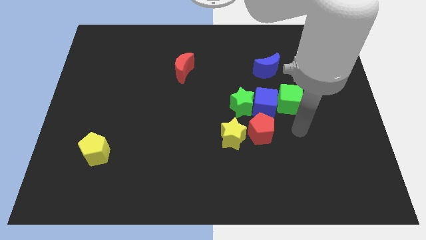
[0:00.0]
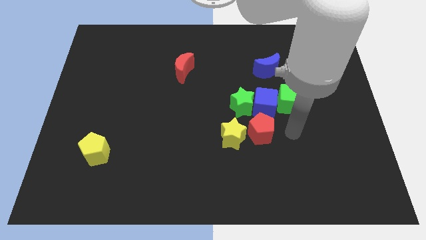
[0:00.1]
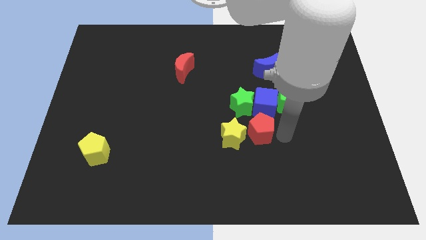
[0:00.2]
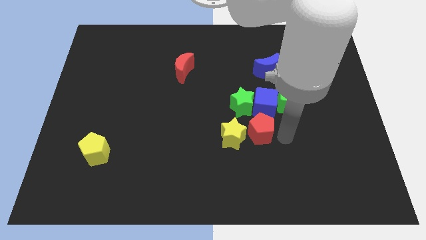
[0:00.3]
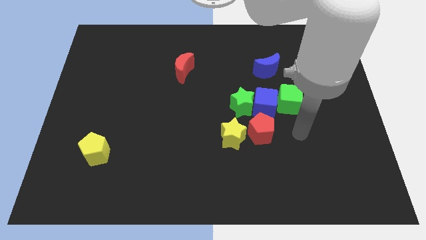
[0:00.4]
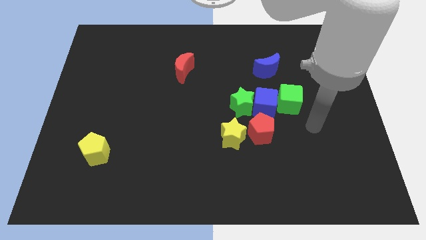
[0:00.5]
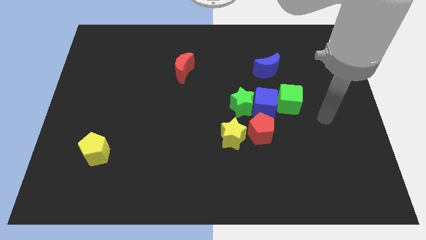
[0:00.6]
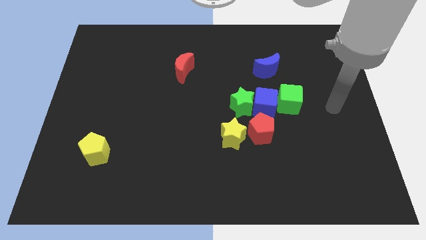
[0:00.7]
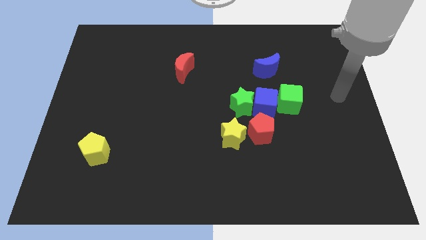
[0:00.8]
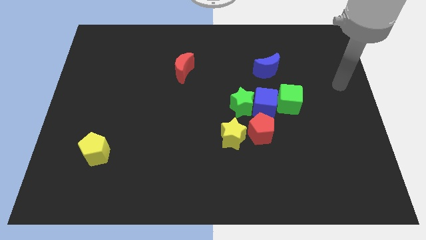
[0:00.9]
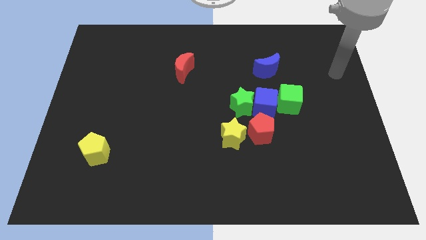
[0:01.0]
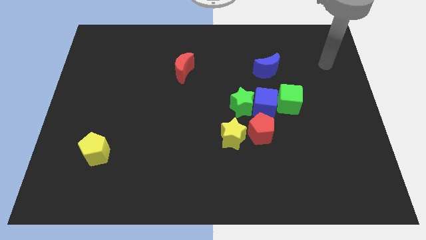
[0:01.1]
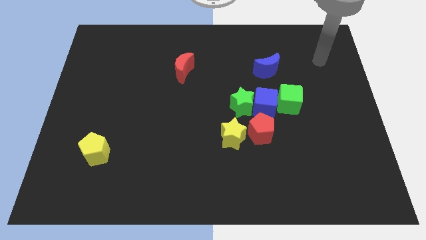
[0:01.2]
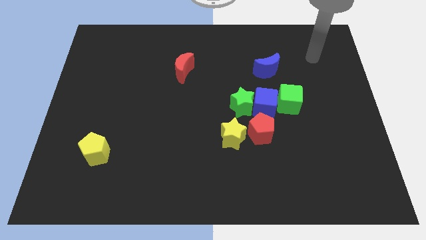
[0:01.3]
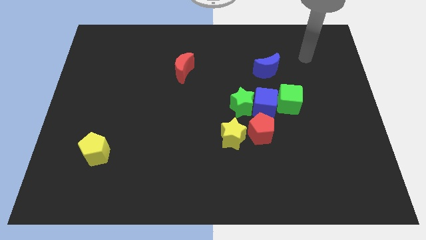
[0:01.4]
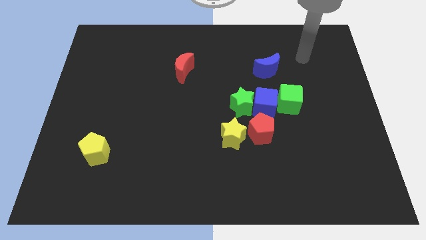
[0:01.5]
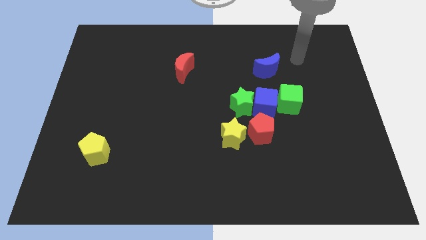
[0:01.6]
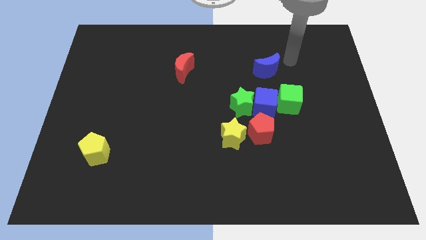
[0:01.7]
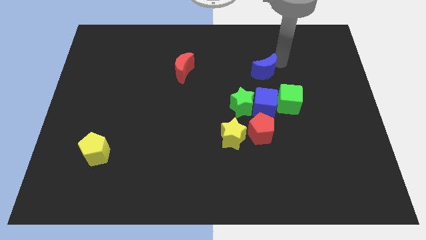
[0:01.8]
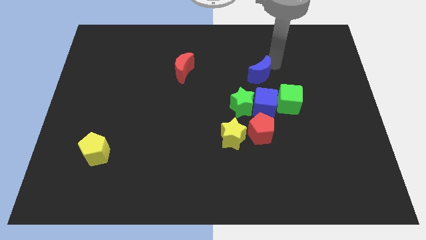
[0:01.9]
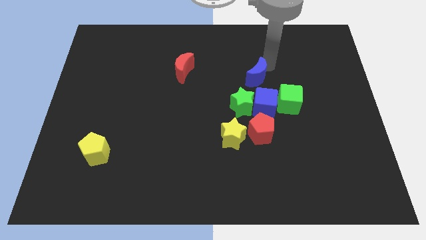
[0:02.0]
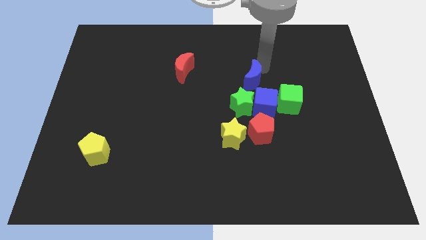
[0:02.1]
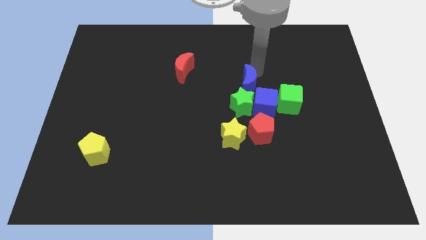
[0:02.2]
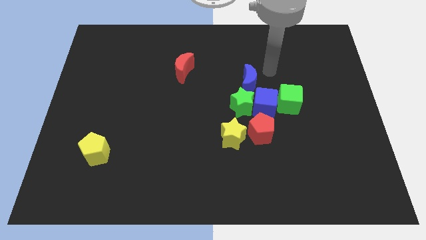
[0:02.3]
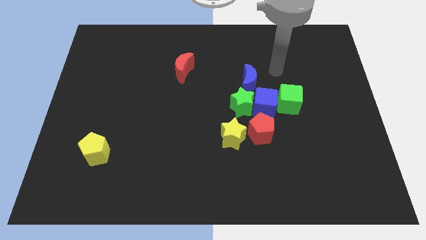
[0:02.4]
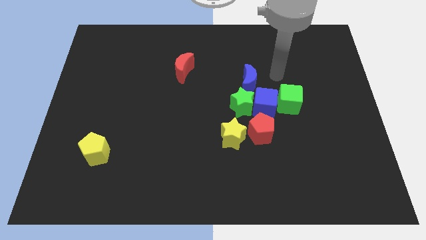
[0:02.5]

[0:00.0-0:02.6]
move the blue moon to the top of green star

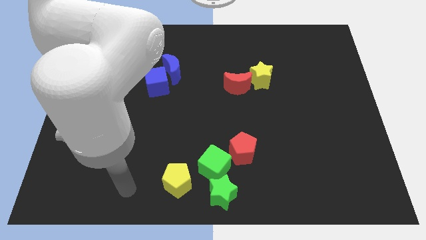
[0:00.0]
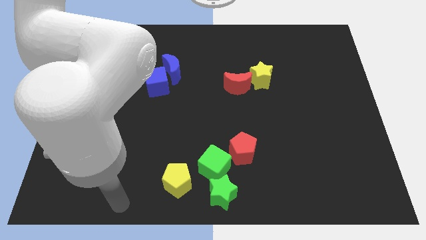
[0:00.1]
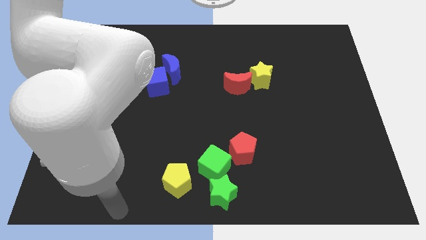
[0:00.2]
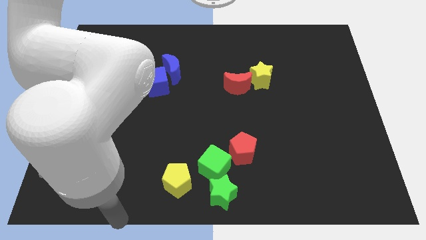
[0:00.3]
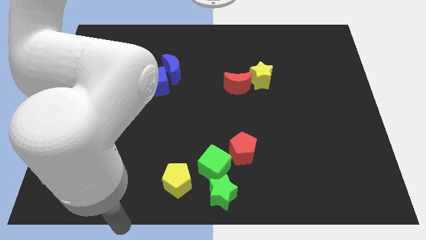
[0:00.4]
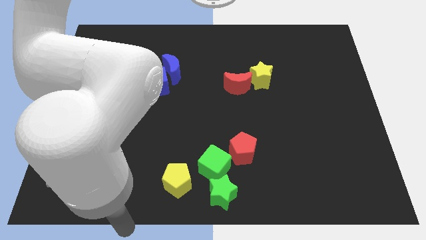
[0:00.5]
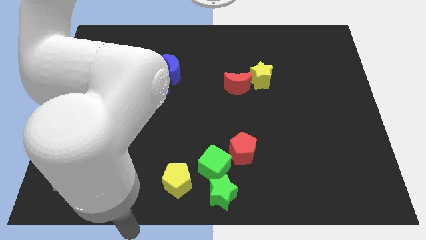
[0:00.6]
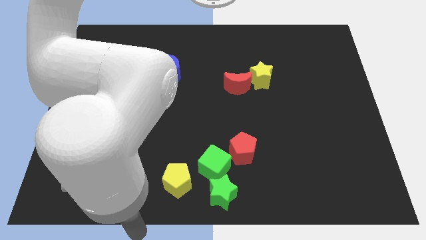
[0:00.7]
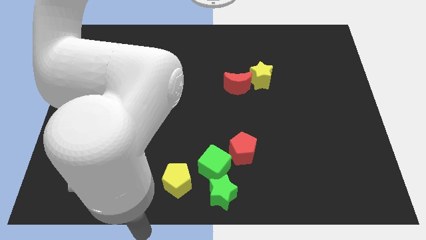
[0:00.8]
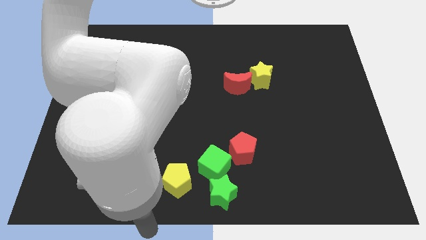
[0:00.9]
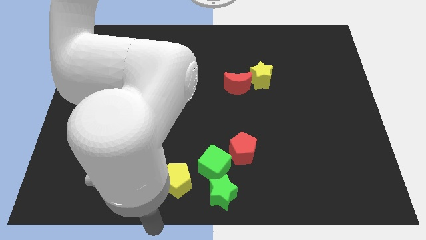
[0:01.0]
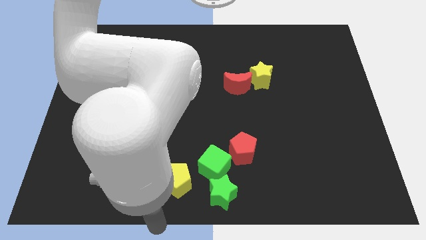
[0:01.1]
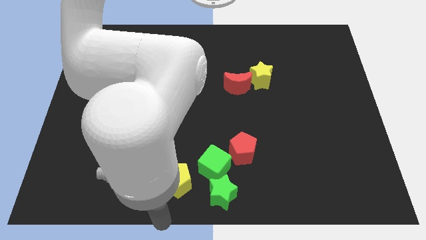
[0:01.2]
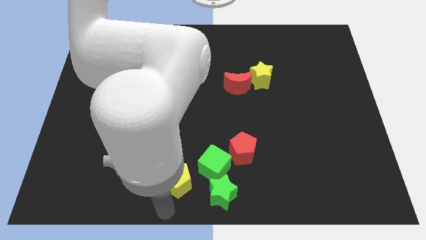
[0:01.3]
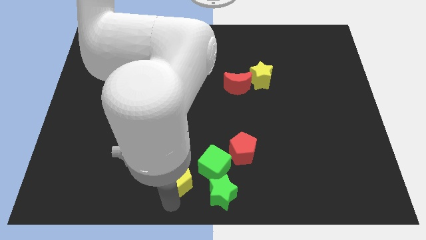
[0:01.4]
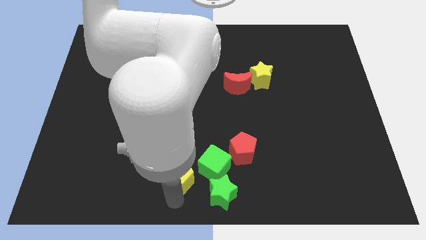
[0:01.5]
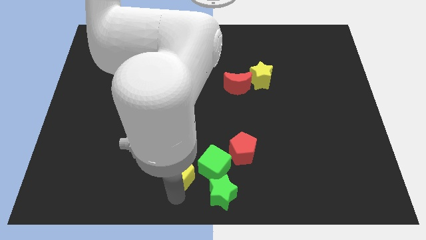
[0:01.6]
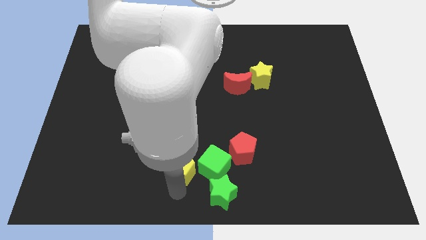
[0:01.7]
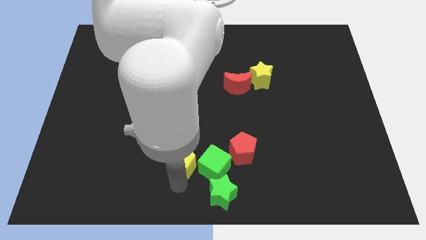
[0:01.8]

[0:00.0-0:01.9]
push the yellow pentagon to the left of the green cube

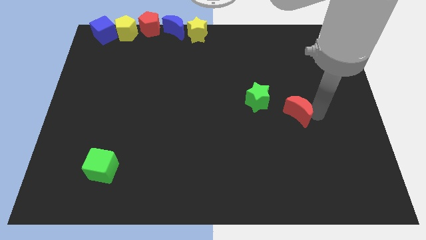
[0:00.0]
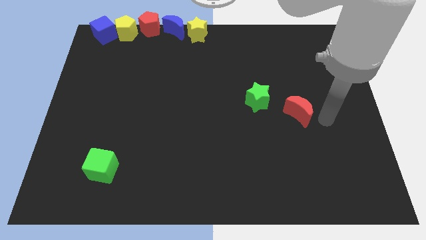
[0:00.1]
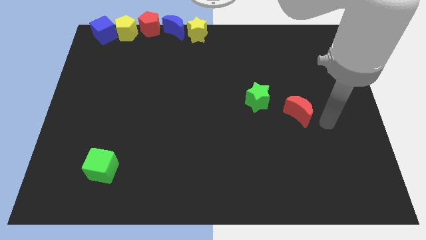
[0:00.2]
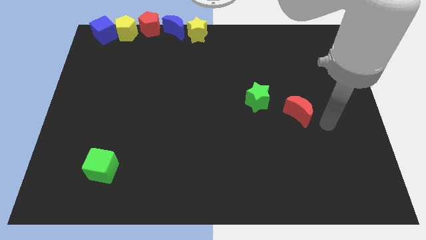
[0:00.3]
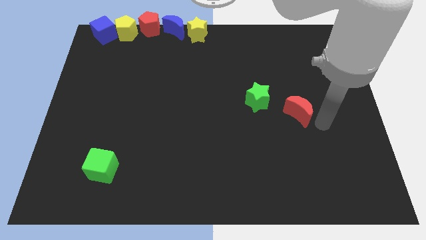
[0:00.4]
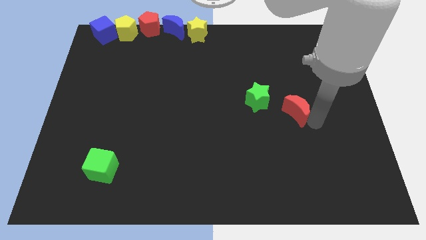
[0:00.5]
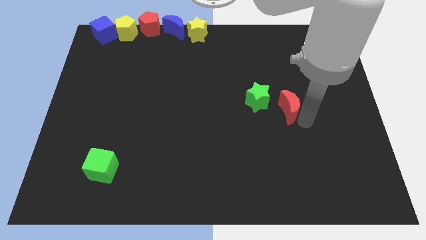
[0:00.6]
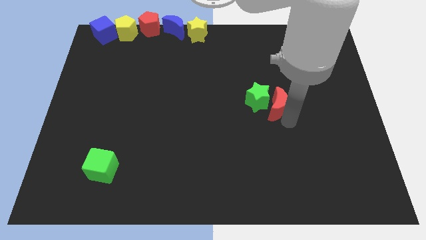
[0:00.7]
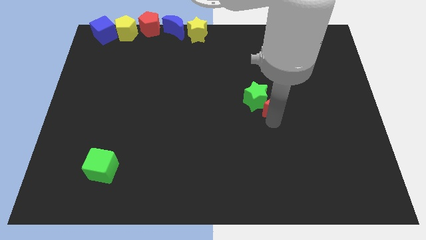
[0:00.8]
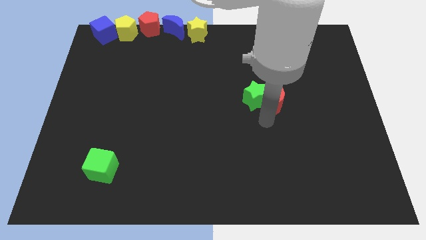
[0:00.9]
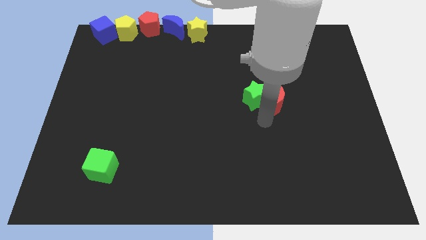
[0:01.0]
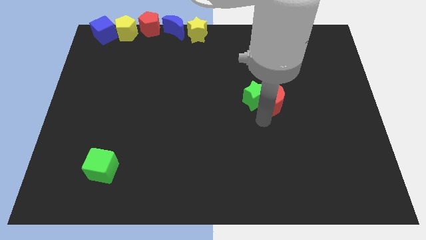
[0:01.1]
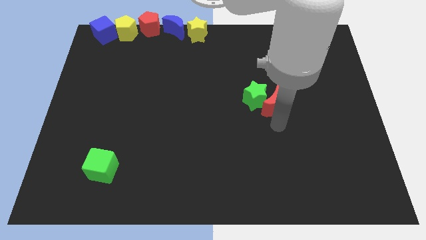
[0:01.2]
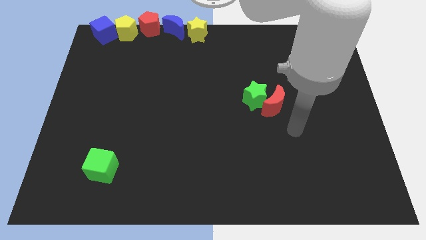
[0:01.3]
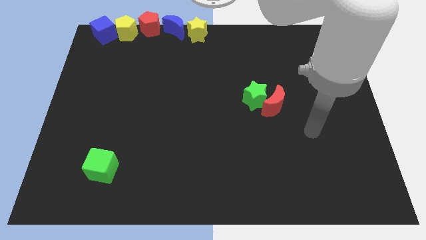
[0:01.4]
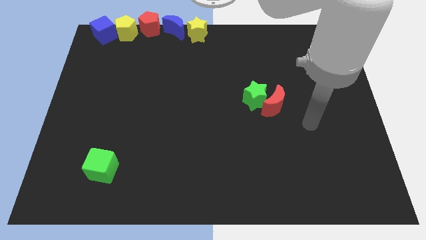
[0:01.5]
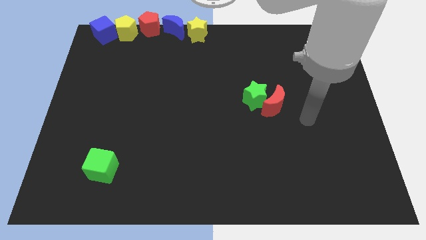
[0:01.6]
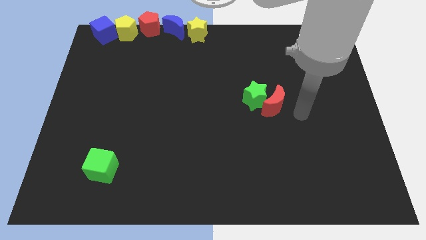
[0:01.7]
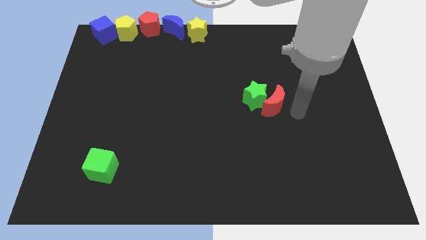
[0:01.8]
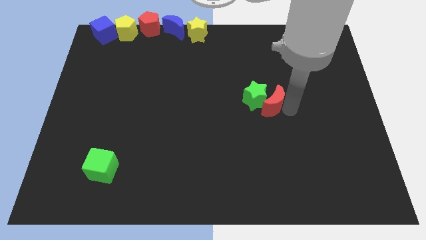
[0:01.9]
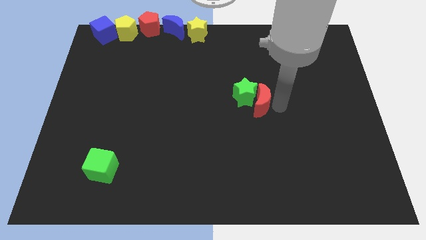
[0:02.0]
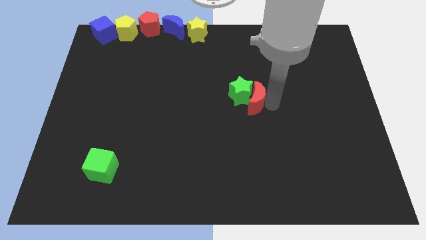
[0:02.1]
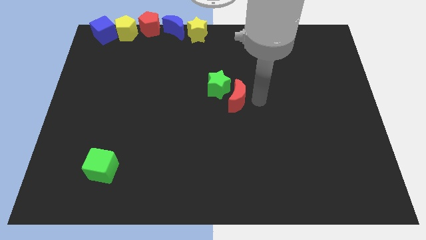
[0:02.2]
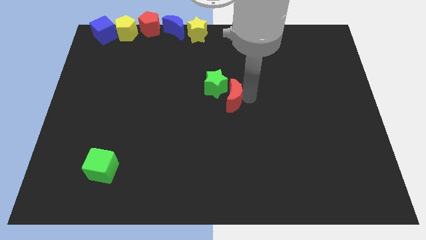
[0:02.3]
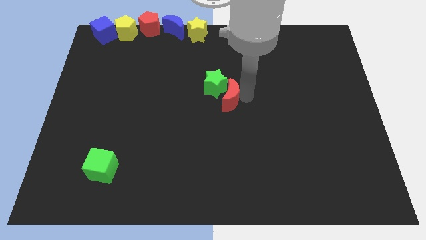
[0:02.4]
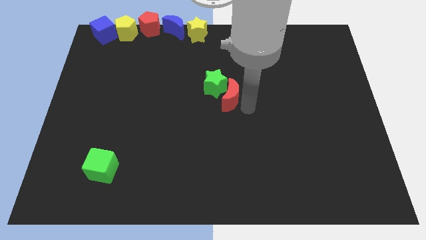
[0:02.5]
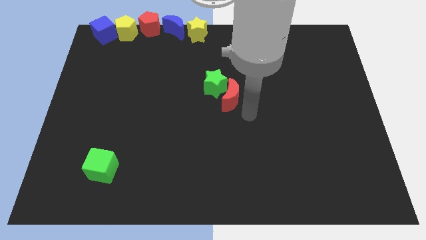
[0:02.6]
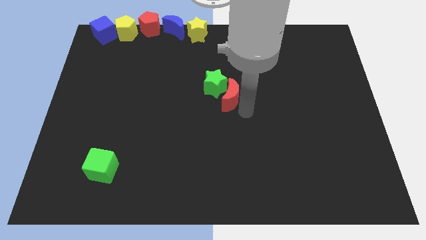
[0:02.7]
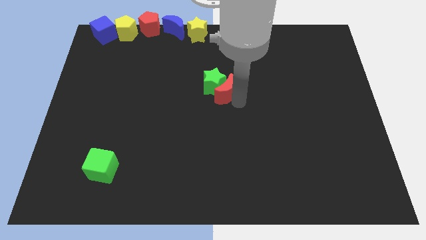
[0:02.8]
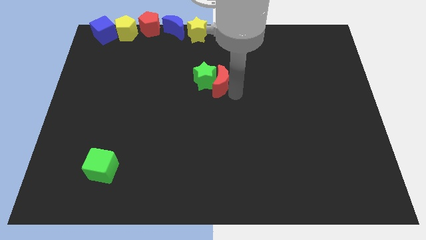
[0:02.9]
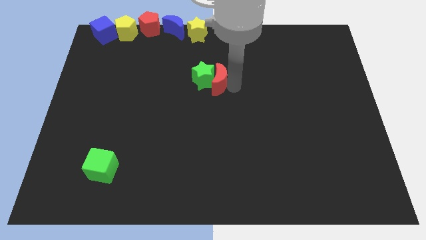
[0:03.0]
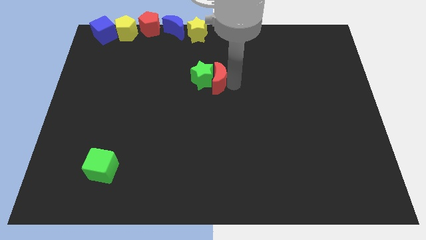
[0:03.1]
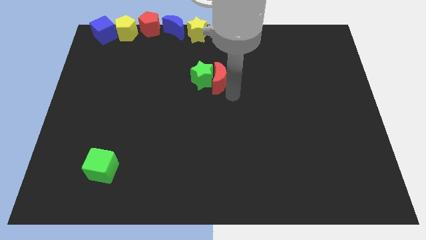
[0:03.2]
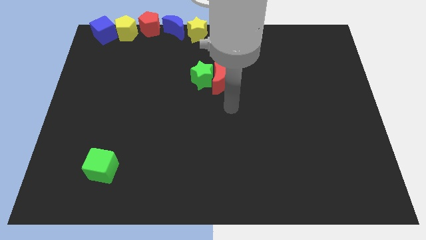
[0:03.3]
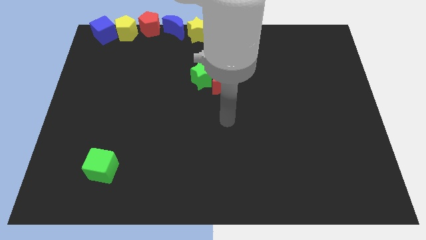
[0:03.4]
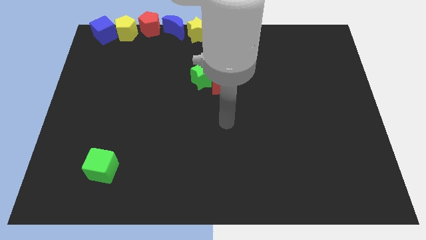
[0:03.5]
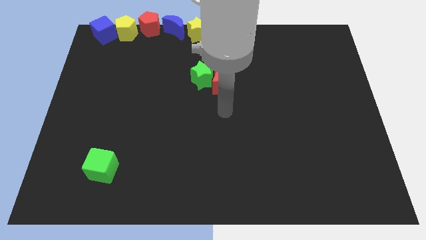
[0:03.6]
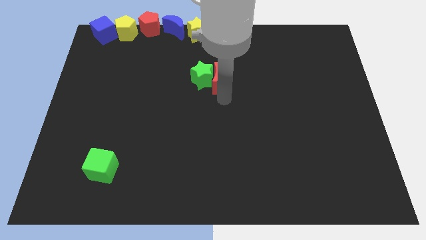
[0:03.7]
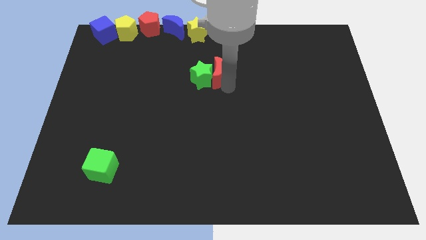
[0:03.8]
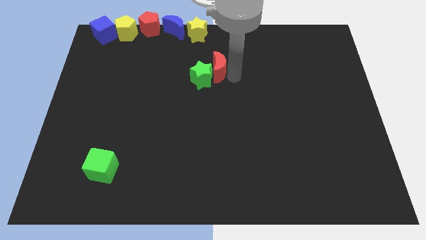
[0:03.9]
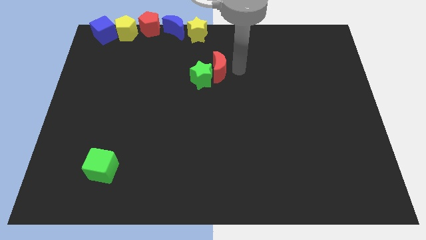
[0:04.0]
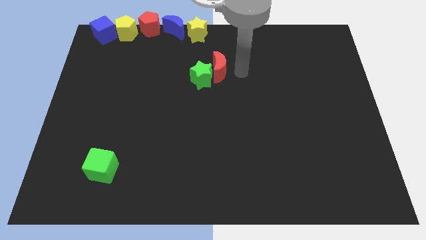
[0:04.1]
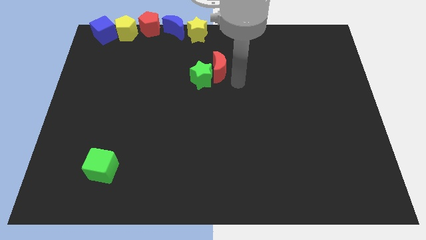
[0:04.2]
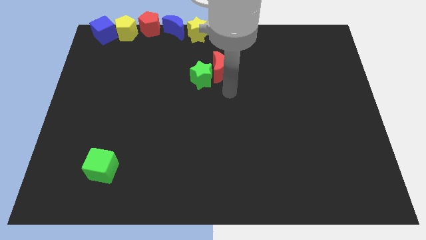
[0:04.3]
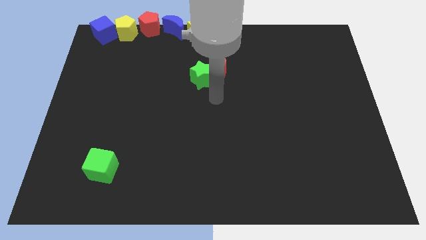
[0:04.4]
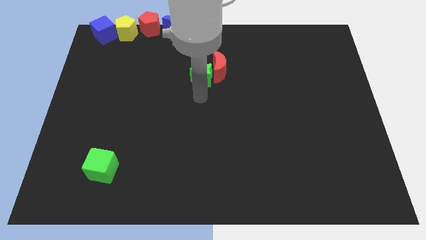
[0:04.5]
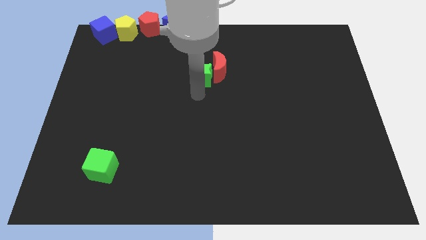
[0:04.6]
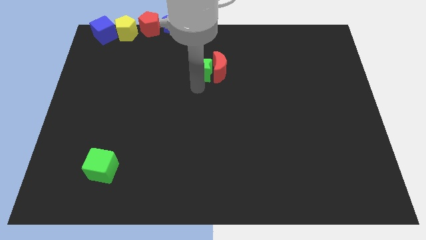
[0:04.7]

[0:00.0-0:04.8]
move the red crescent along with the green star to the bottom of the yellow star
